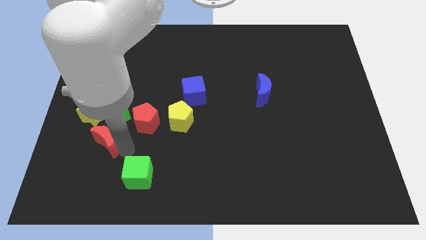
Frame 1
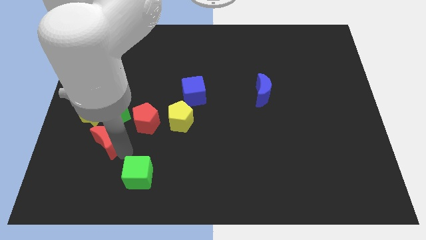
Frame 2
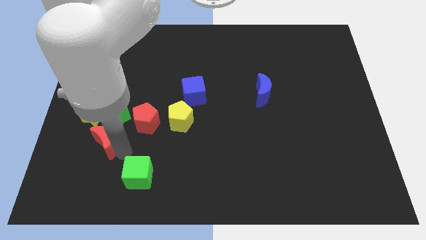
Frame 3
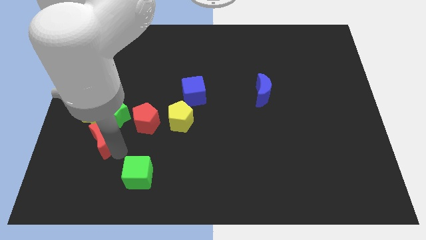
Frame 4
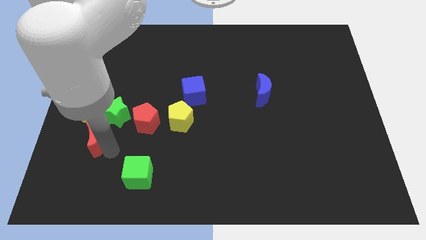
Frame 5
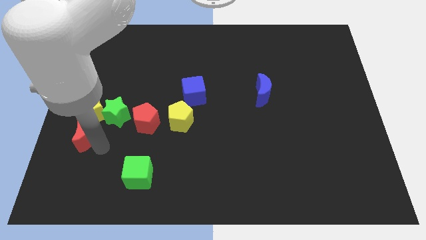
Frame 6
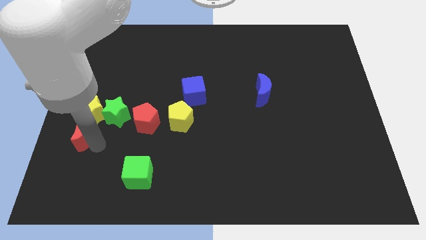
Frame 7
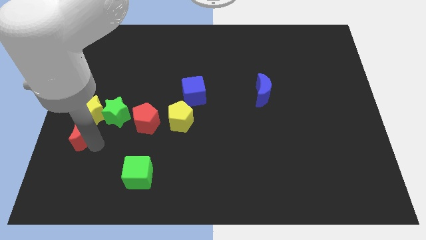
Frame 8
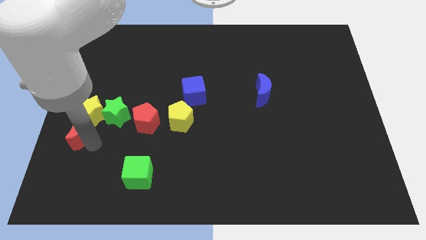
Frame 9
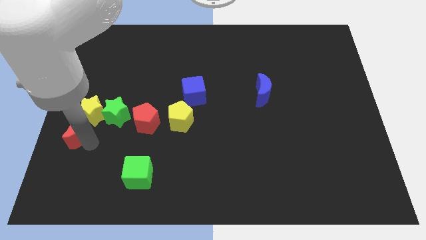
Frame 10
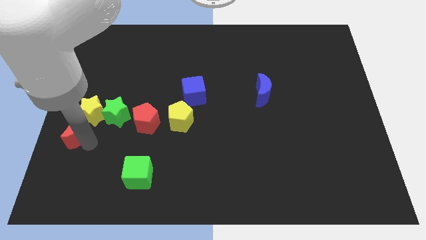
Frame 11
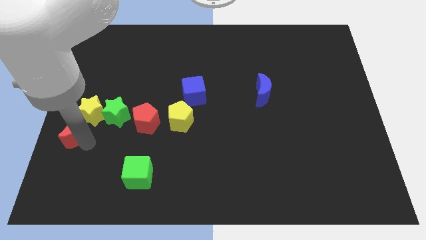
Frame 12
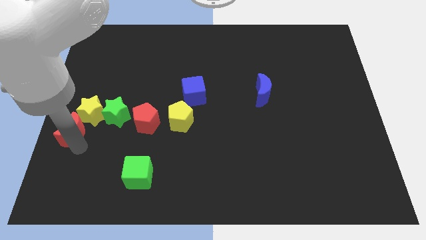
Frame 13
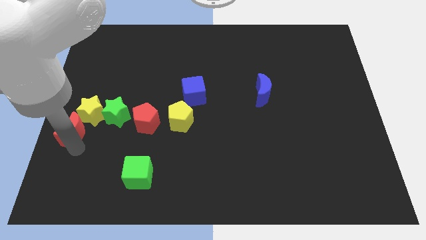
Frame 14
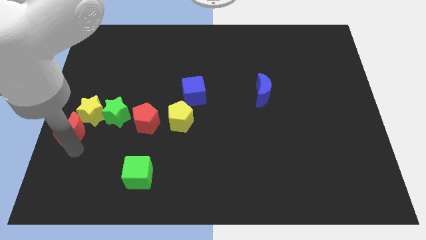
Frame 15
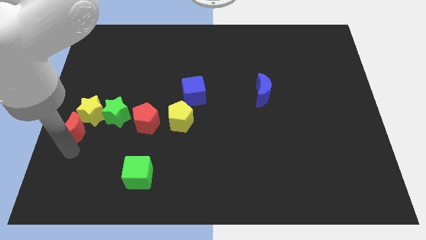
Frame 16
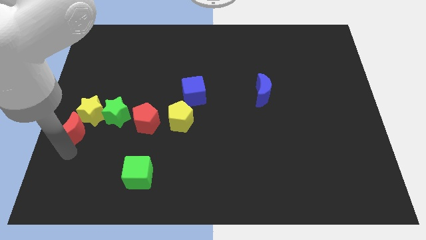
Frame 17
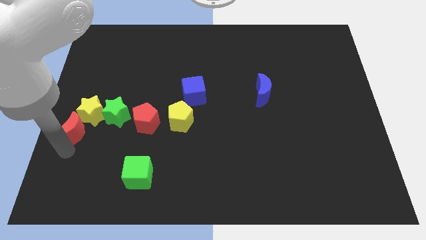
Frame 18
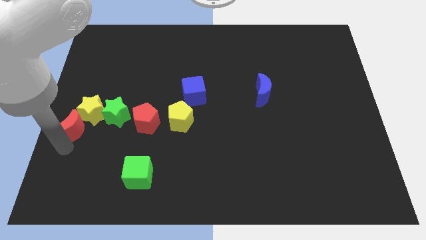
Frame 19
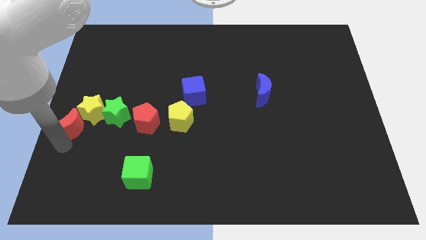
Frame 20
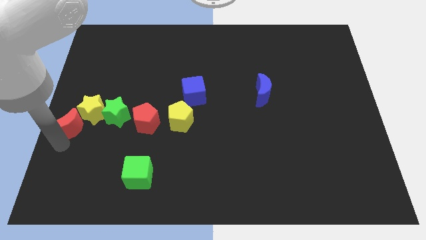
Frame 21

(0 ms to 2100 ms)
move the red moon to the center left

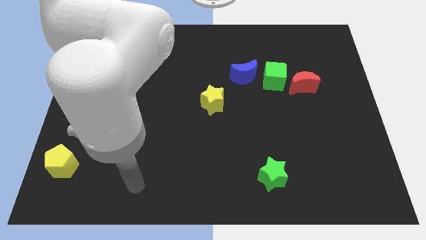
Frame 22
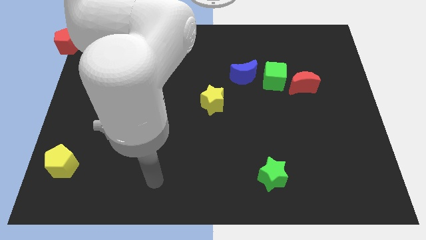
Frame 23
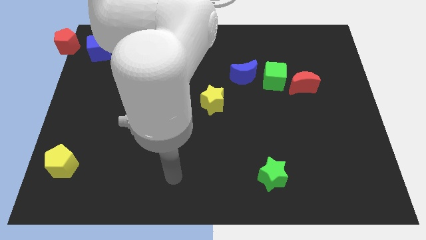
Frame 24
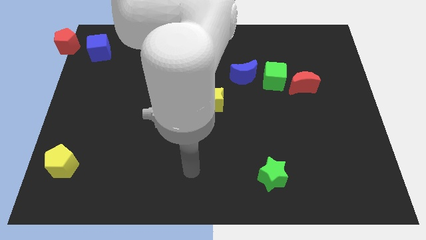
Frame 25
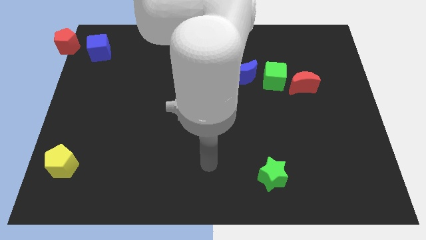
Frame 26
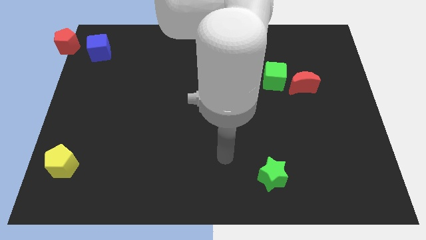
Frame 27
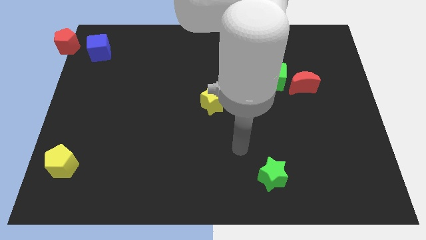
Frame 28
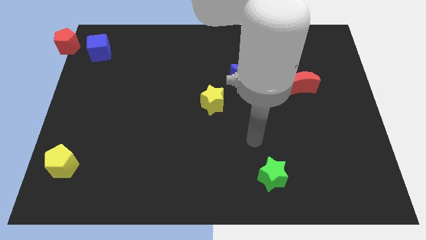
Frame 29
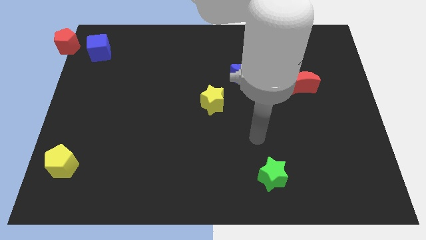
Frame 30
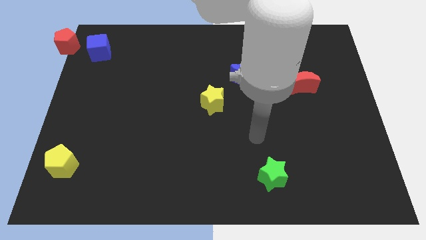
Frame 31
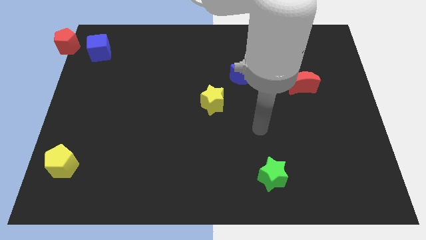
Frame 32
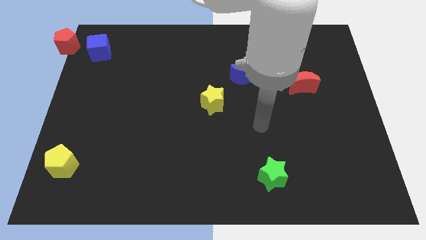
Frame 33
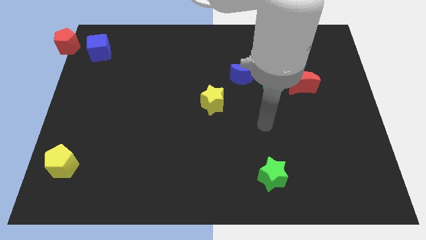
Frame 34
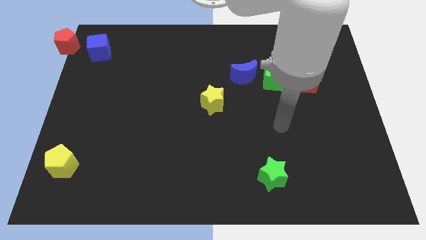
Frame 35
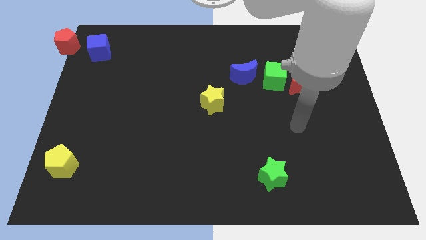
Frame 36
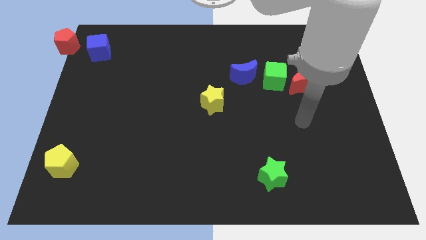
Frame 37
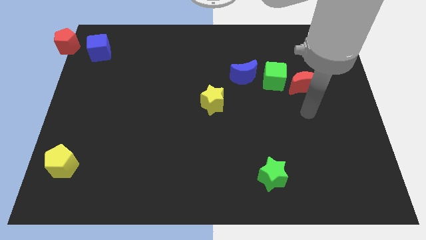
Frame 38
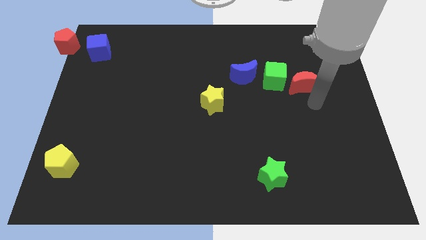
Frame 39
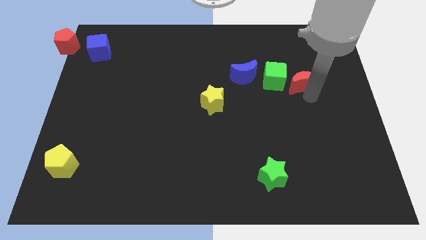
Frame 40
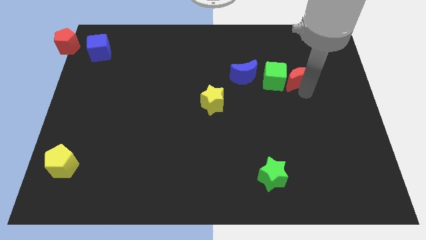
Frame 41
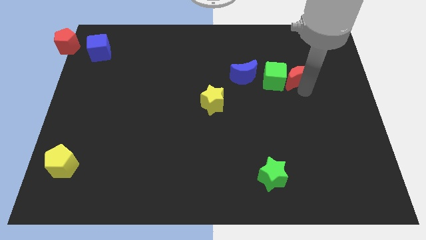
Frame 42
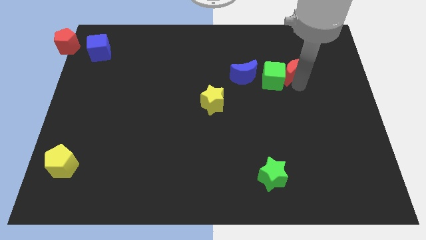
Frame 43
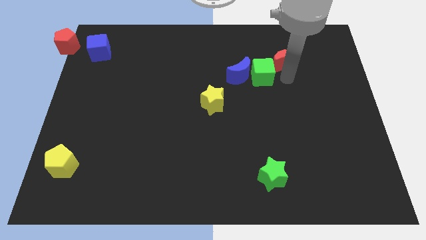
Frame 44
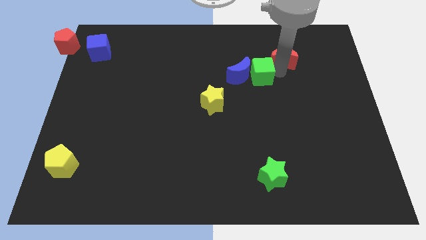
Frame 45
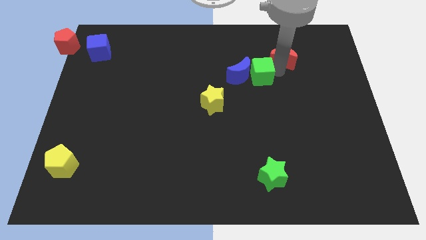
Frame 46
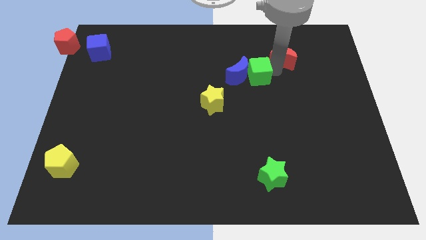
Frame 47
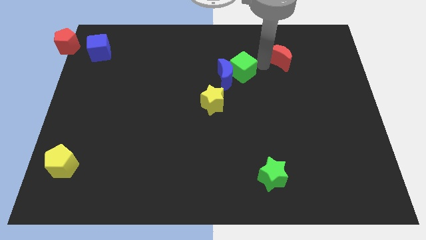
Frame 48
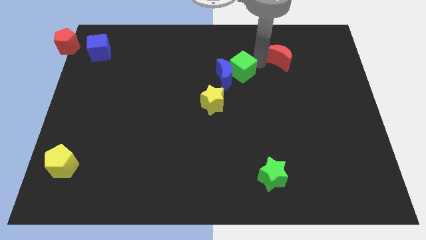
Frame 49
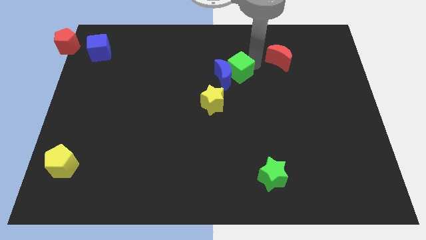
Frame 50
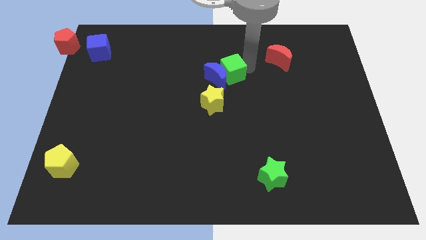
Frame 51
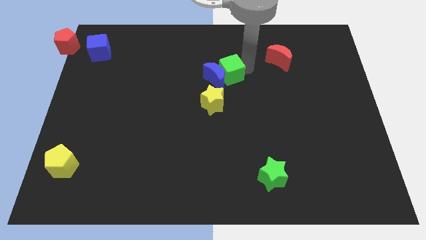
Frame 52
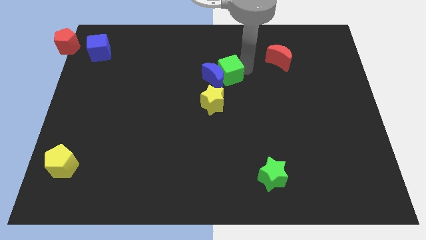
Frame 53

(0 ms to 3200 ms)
separate green cube away from red moon

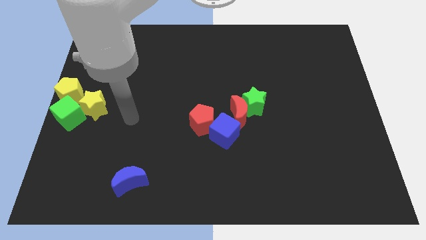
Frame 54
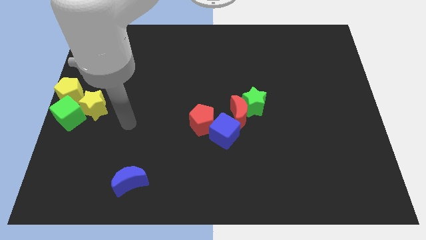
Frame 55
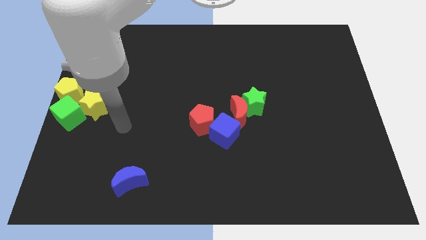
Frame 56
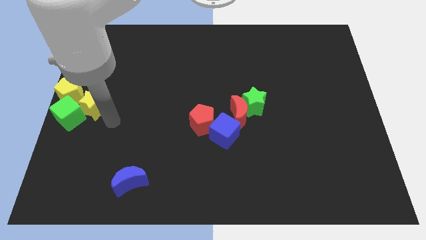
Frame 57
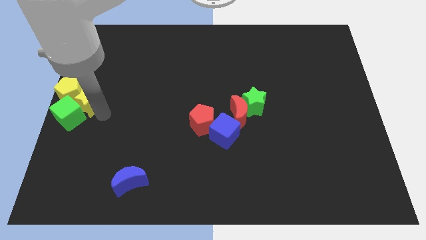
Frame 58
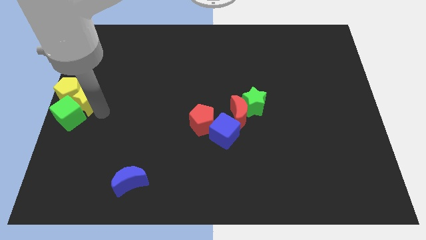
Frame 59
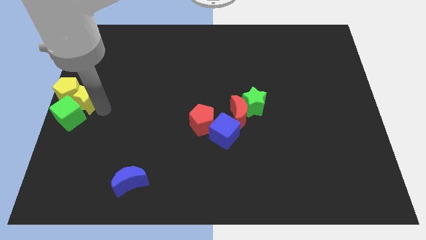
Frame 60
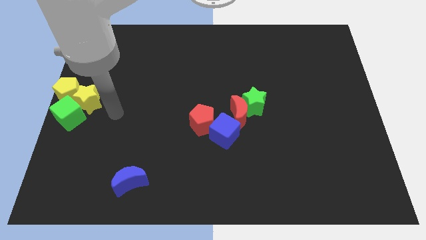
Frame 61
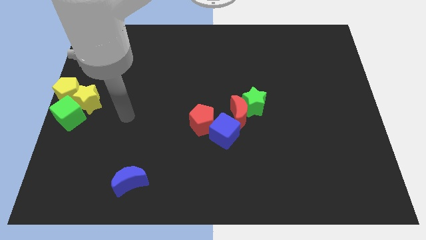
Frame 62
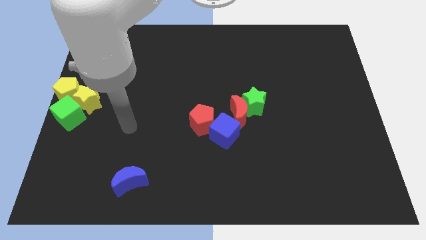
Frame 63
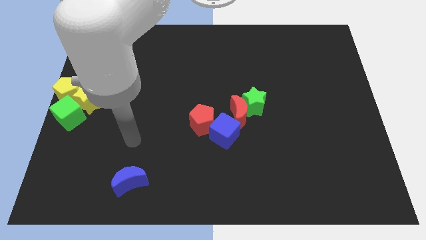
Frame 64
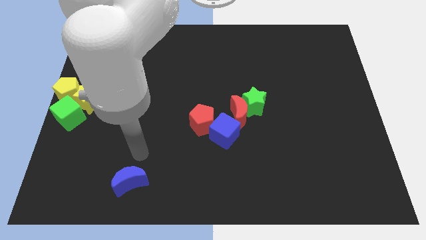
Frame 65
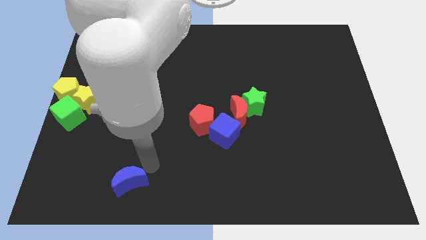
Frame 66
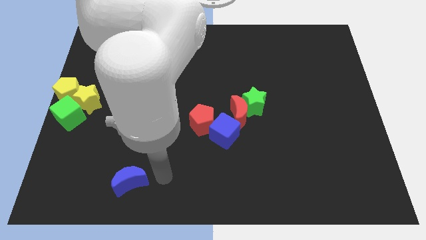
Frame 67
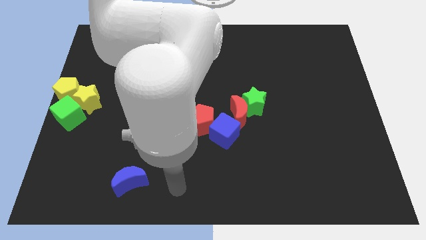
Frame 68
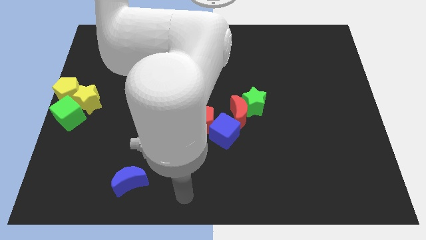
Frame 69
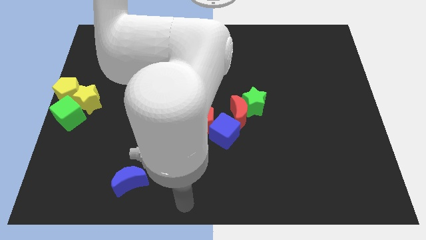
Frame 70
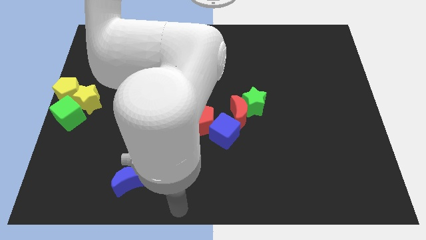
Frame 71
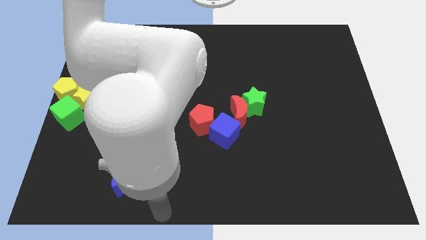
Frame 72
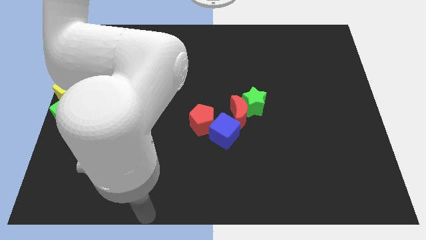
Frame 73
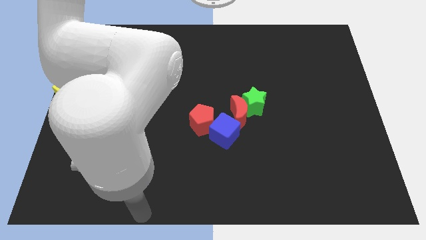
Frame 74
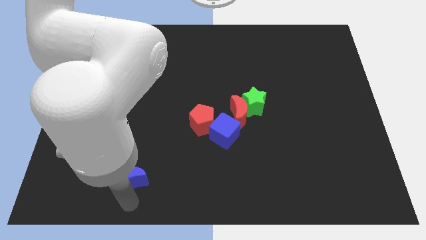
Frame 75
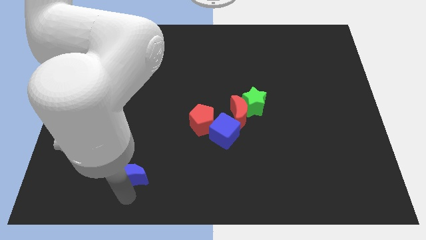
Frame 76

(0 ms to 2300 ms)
move your arm at the bottom of the blue moon

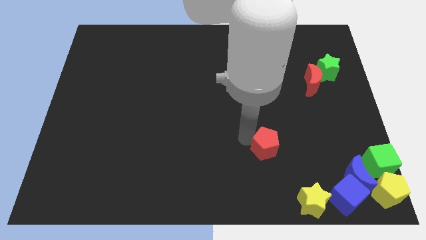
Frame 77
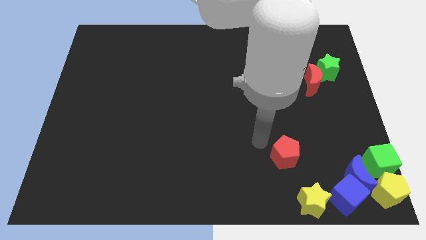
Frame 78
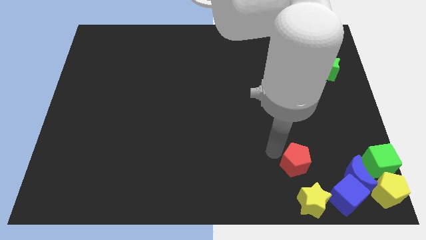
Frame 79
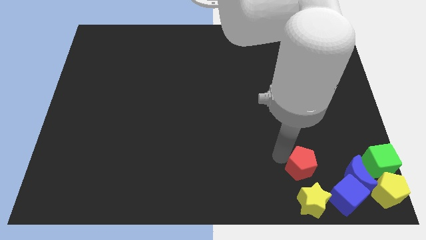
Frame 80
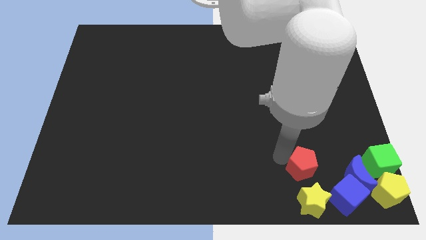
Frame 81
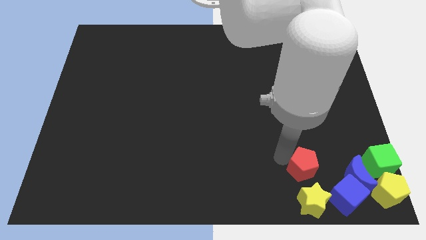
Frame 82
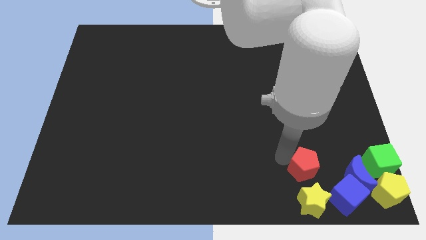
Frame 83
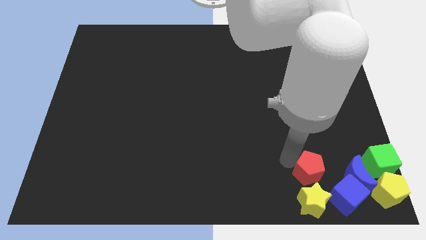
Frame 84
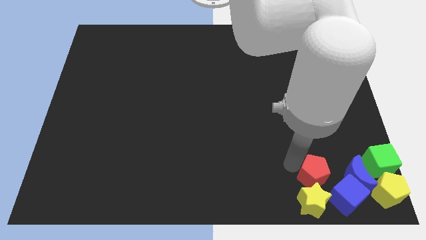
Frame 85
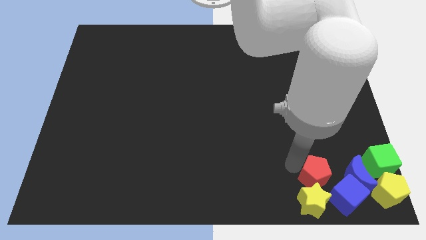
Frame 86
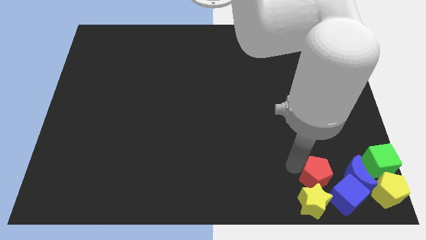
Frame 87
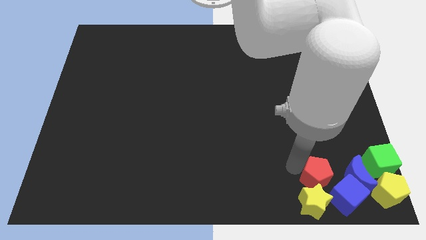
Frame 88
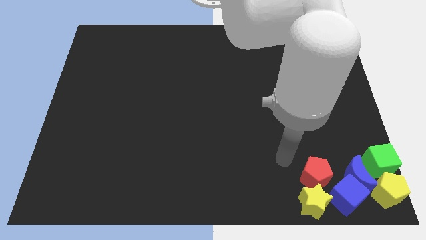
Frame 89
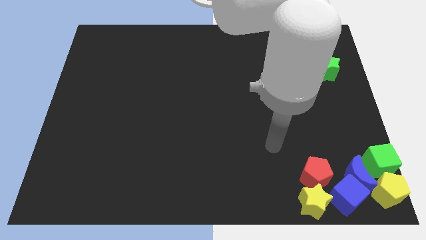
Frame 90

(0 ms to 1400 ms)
move the red pentagon towards the top of the yellow star
